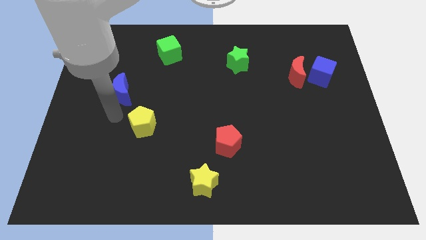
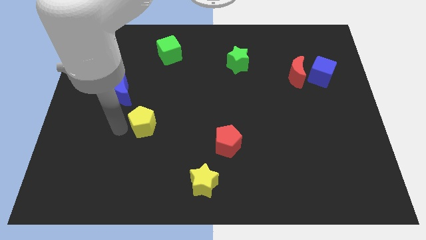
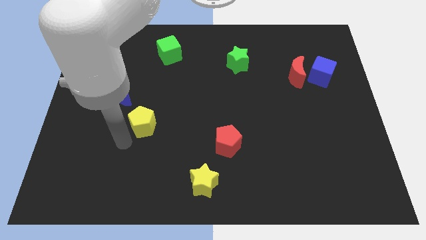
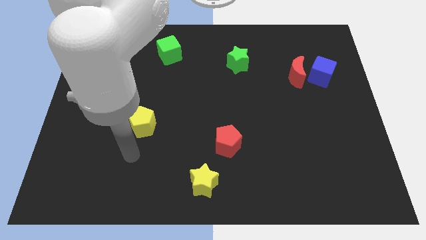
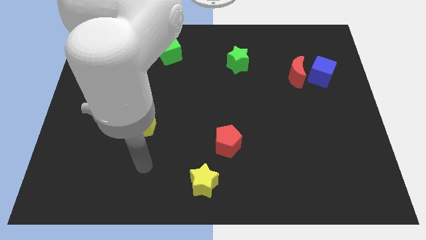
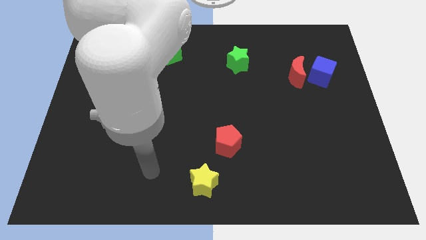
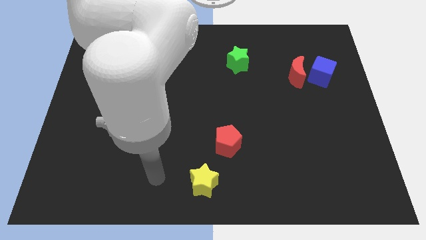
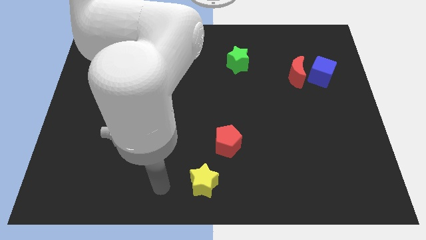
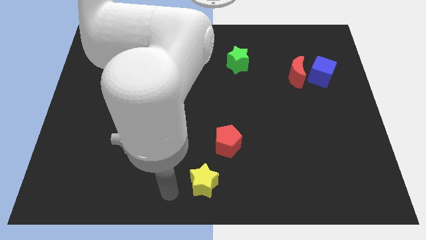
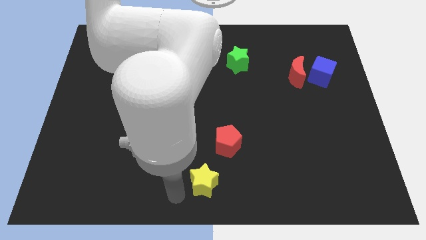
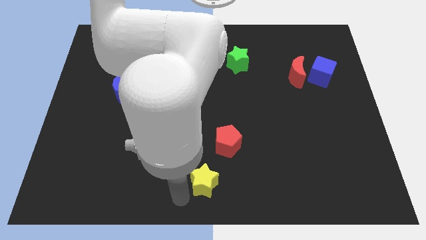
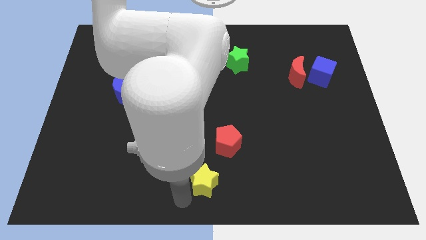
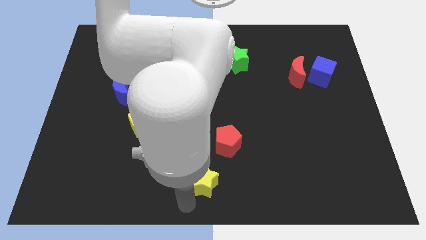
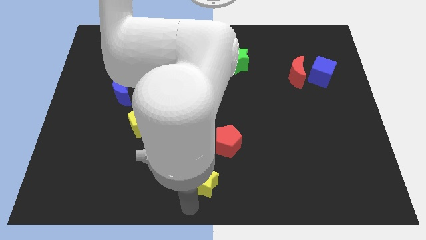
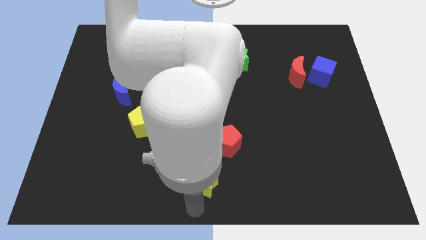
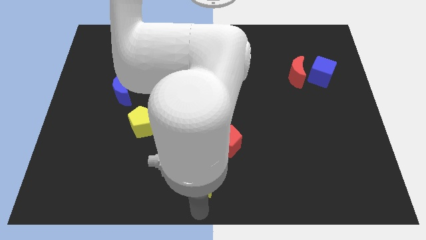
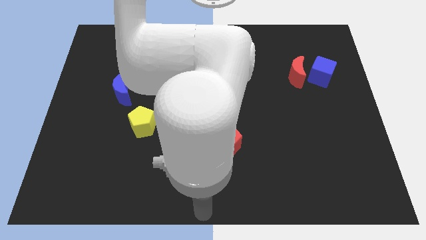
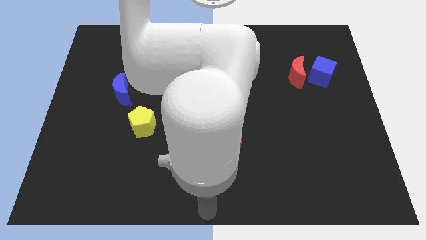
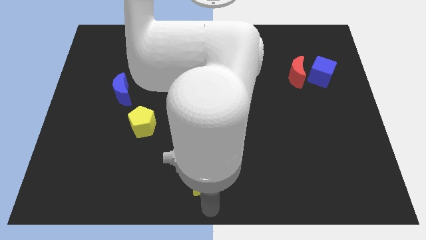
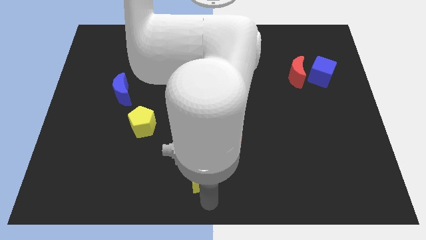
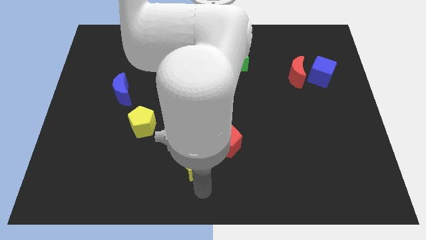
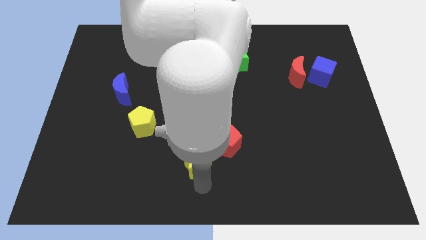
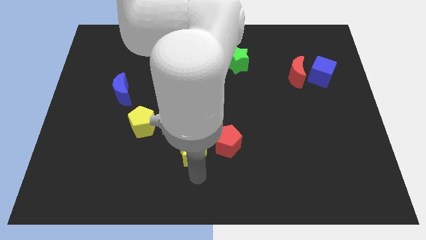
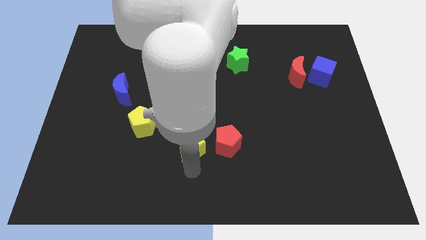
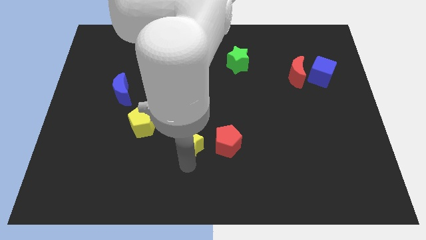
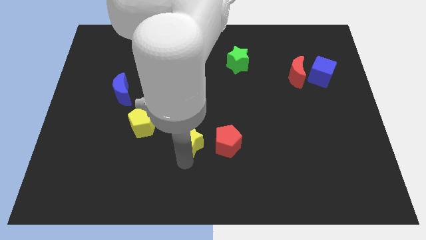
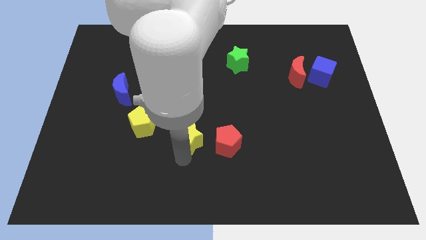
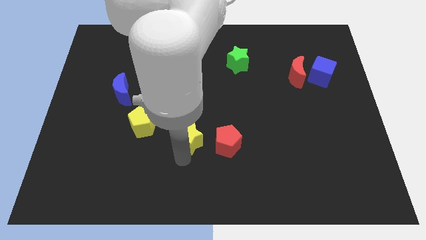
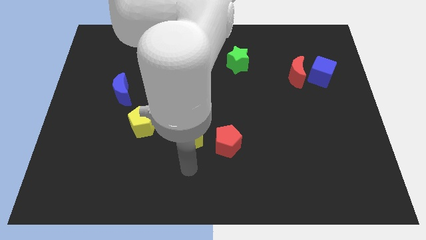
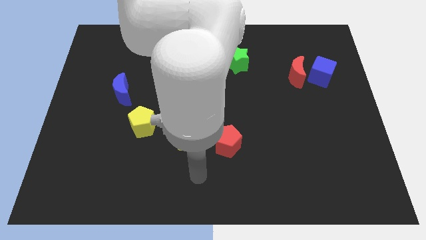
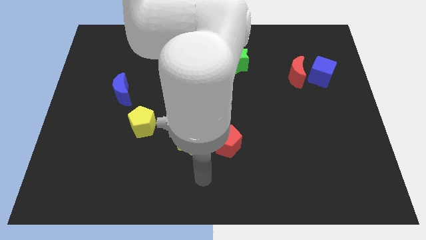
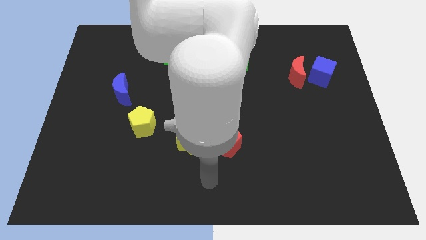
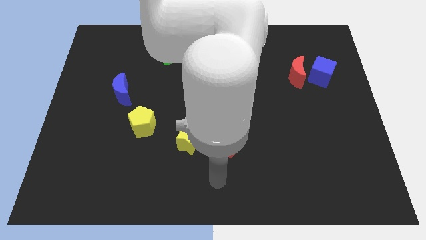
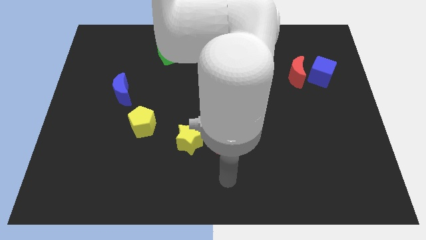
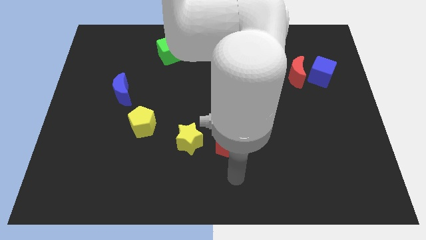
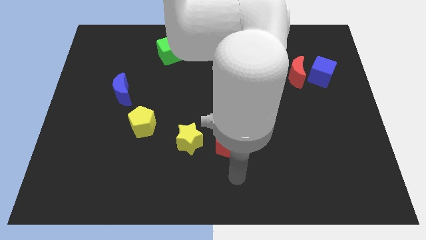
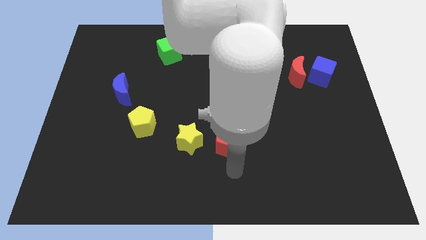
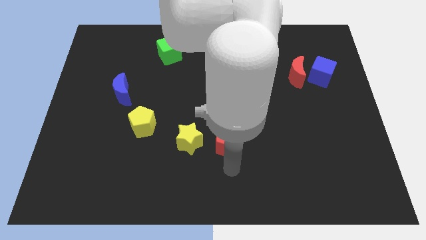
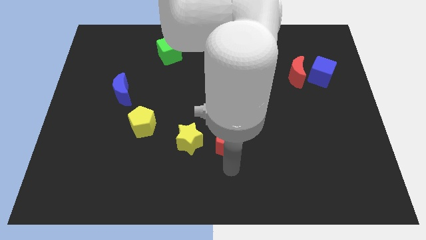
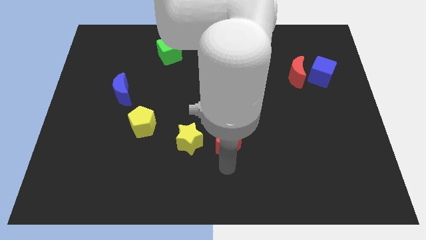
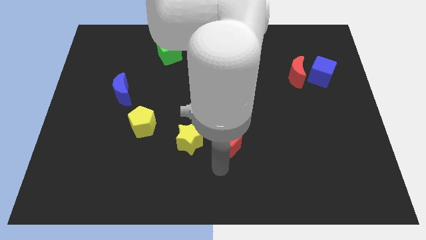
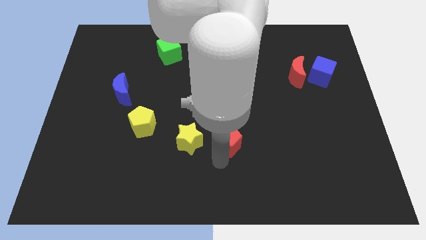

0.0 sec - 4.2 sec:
put the yellow star to the left side of the red pentagon

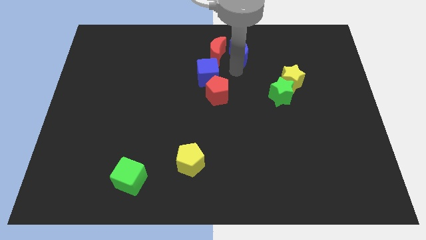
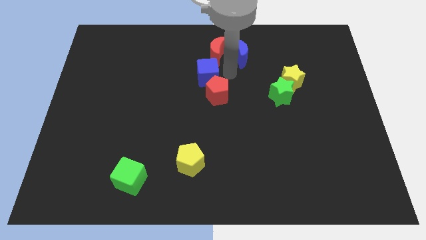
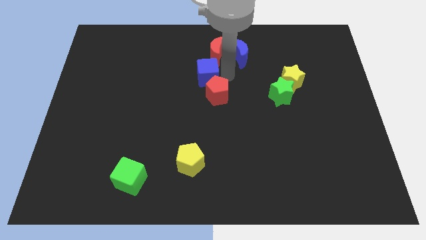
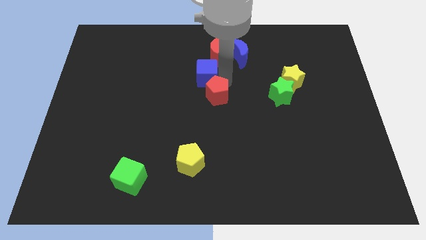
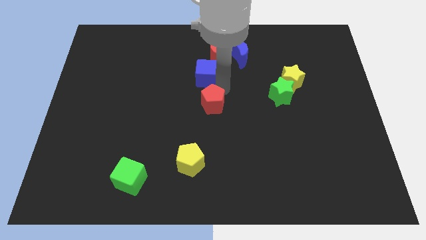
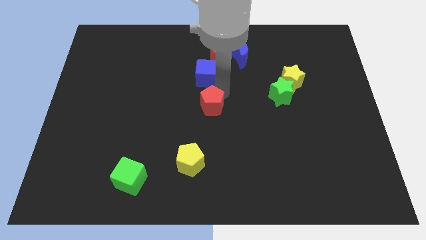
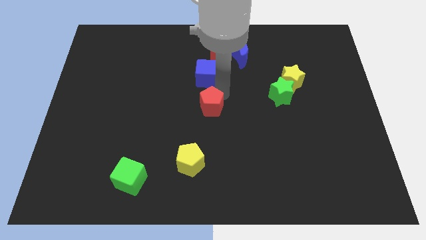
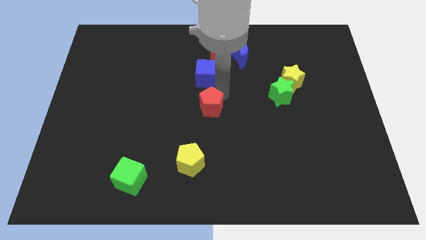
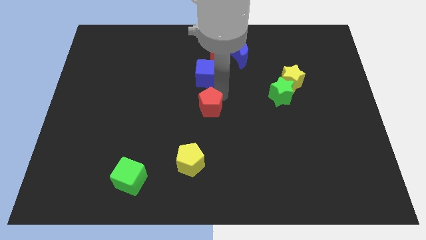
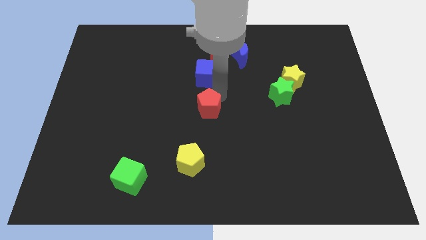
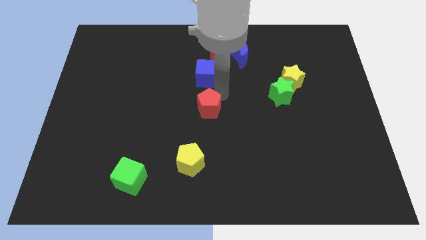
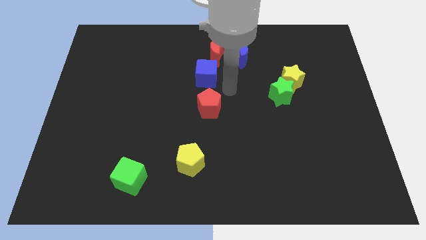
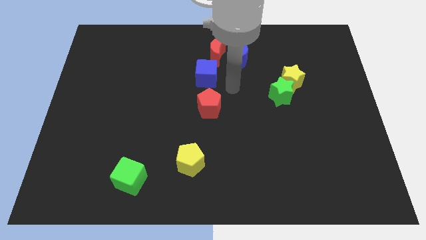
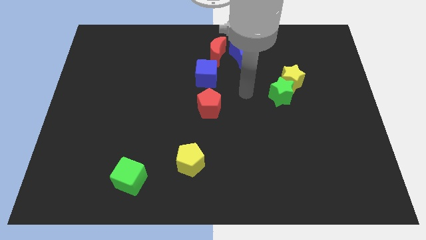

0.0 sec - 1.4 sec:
slightly push the red pentagon downward

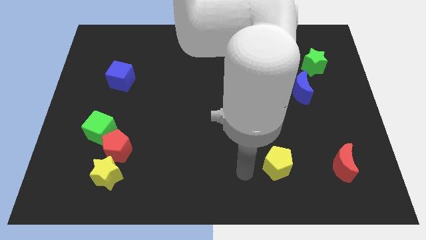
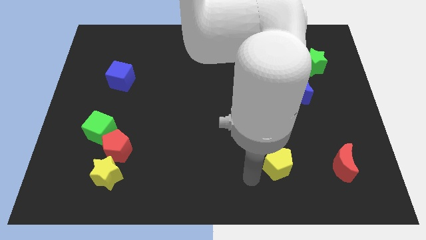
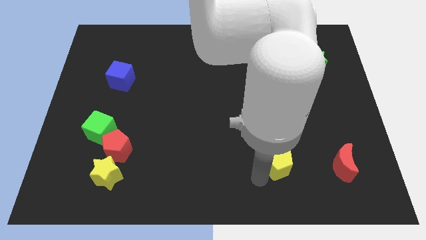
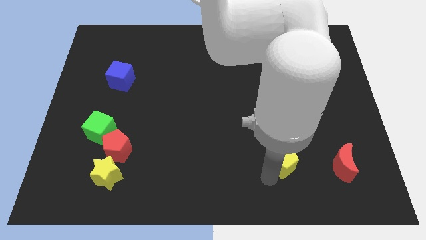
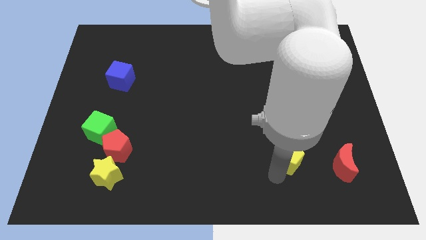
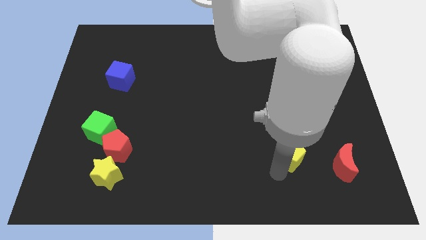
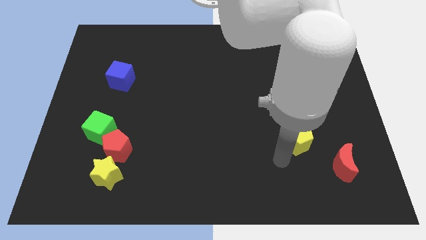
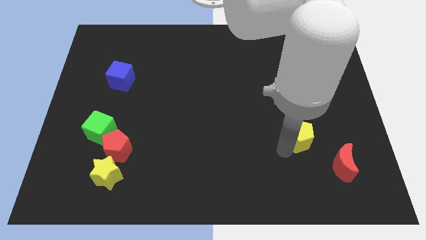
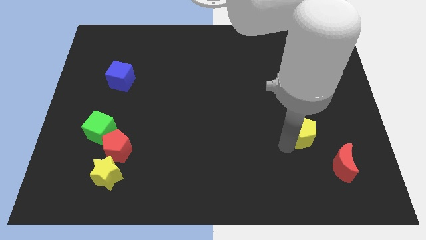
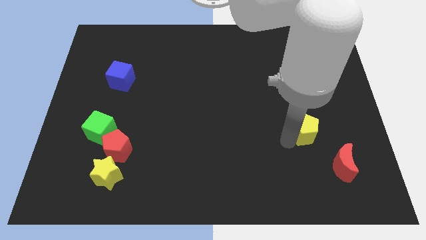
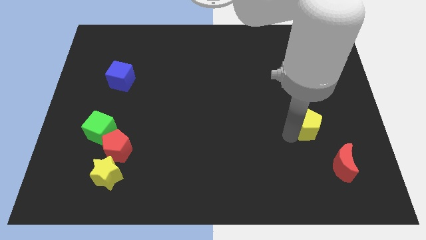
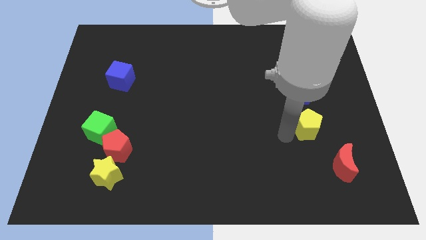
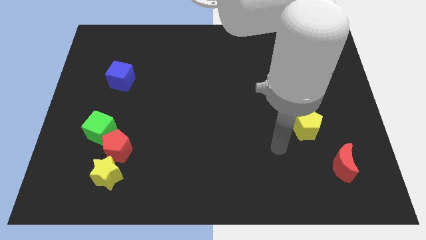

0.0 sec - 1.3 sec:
place the yellow pentagon at the bottom of blue moon

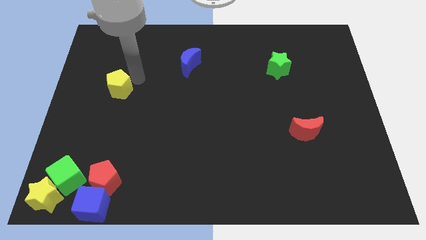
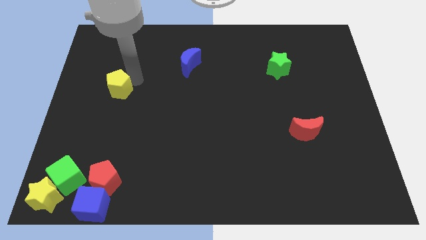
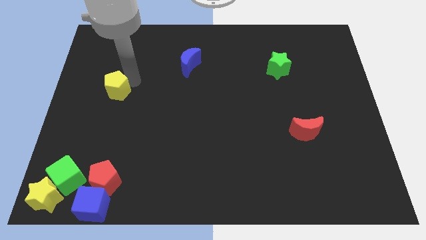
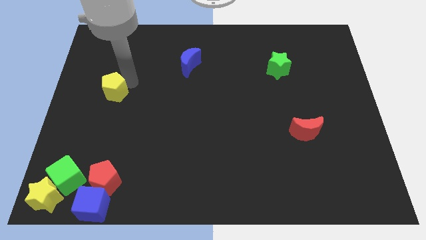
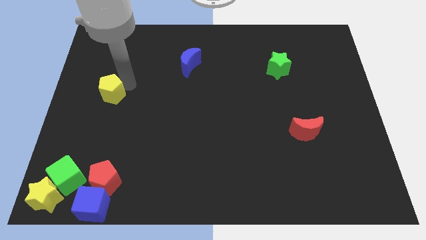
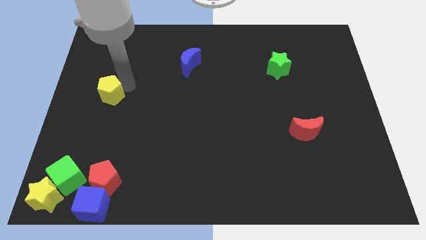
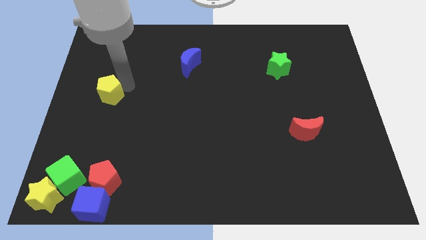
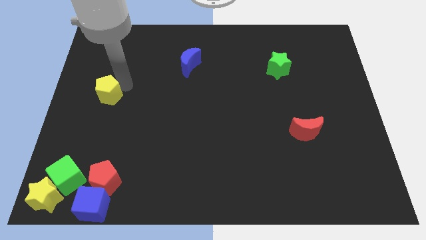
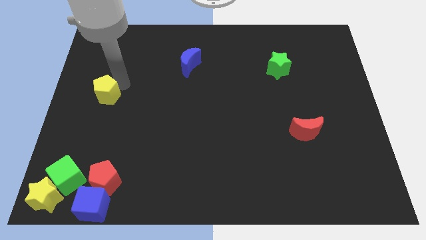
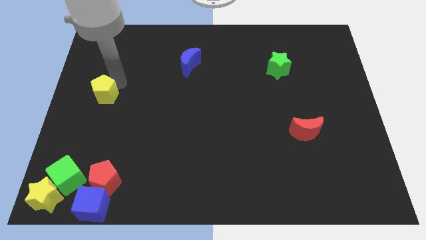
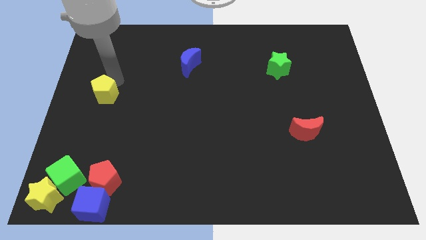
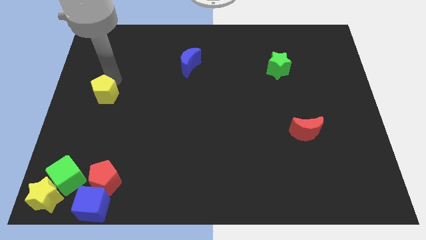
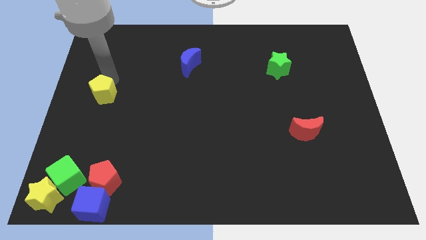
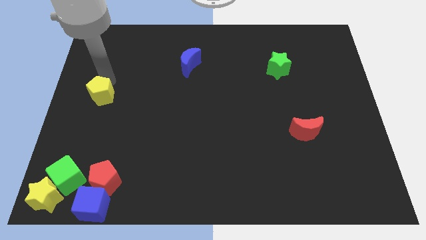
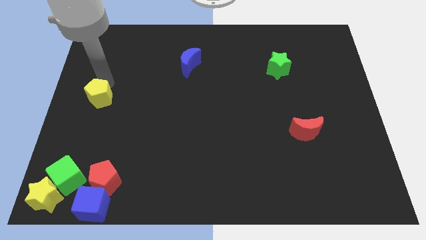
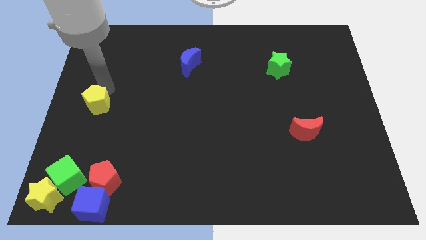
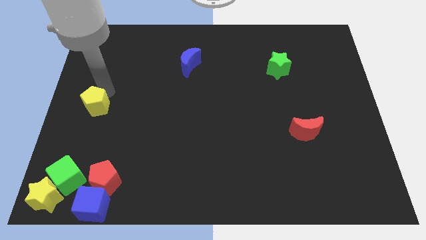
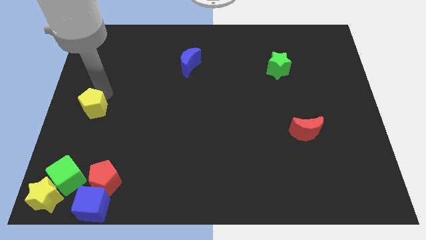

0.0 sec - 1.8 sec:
move the yellow pentagon to the vertically to green cube

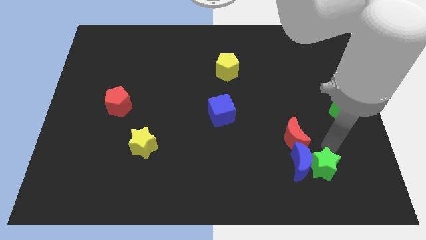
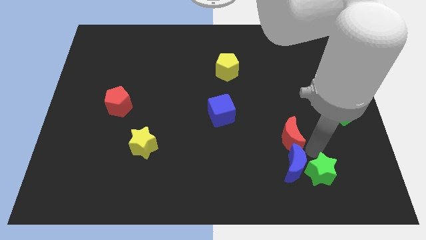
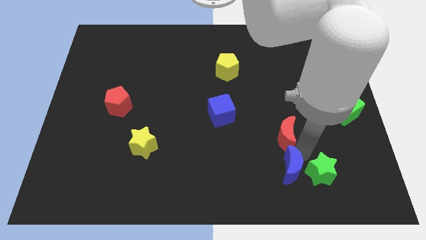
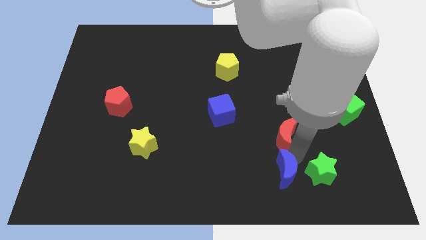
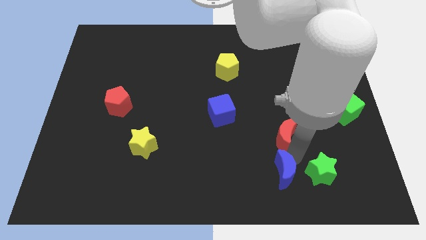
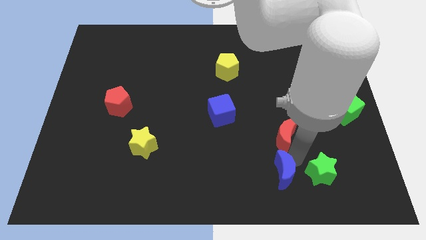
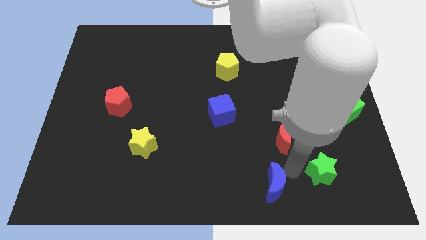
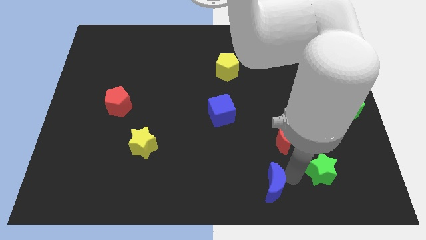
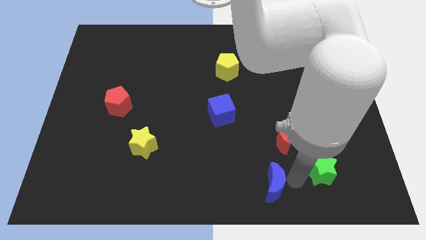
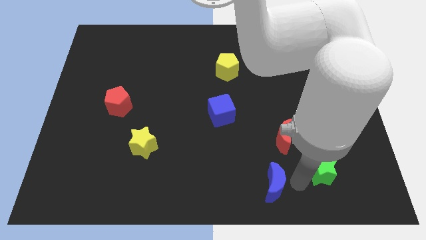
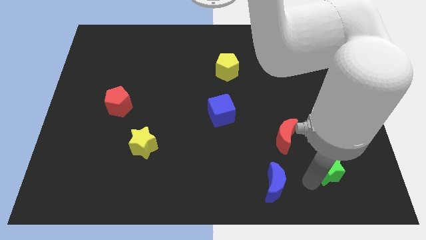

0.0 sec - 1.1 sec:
separate the blue moon from the red moon
